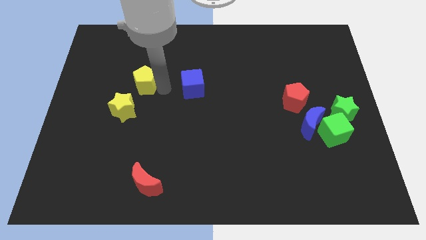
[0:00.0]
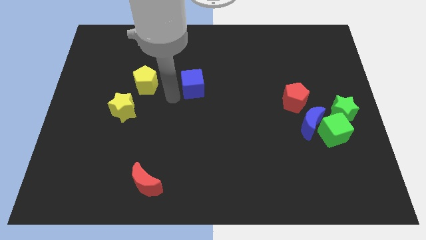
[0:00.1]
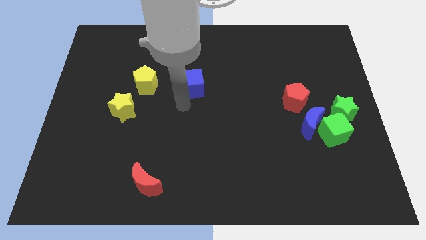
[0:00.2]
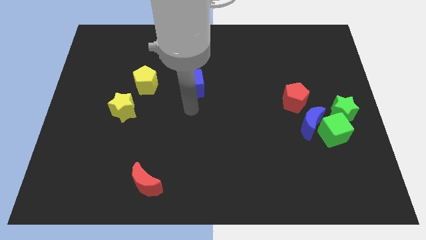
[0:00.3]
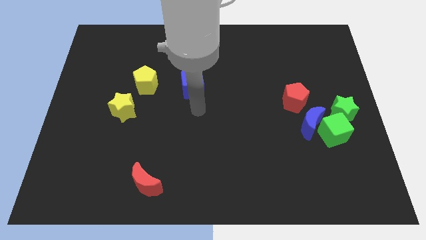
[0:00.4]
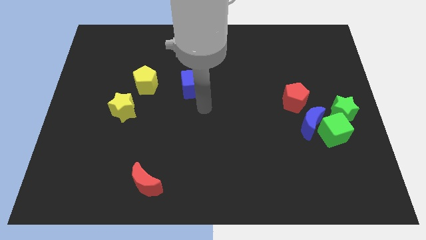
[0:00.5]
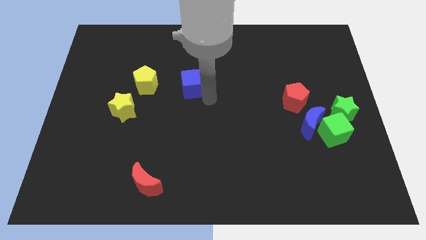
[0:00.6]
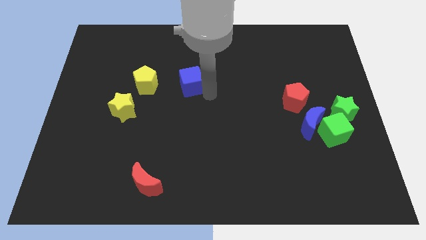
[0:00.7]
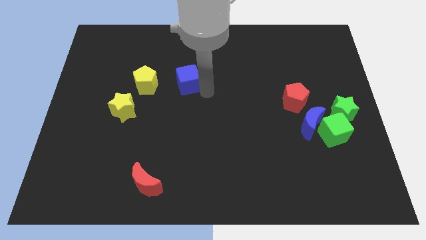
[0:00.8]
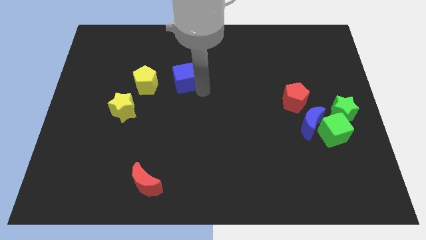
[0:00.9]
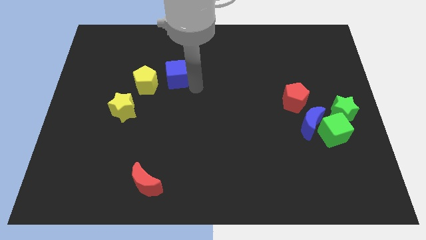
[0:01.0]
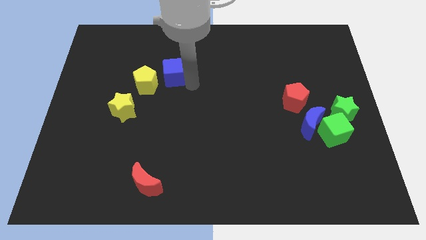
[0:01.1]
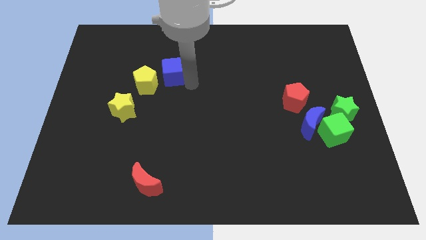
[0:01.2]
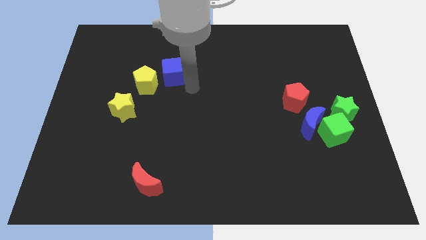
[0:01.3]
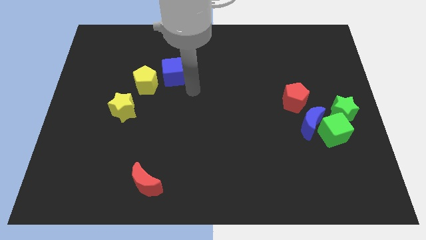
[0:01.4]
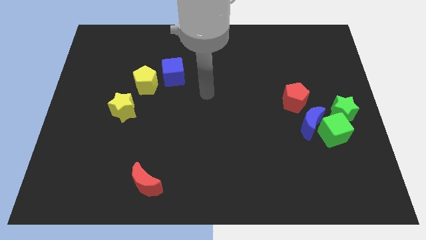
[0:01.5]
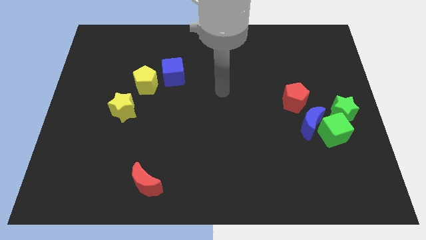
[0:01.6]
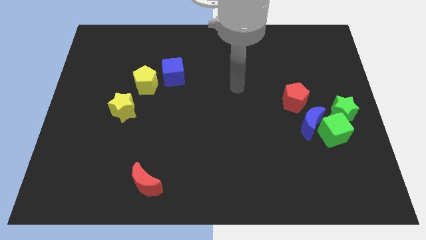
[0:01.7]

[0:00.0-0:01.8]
push the blue cube to the right of yellow pentagon

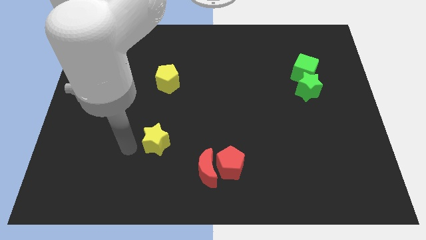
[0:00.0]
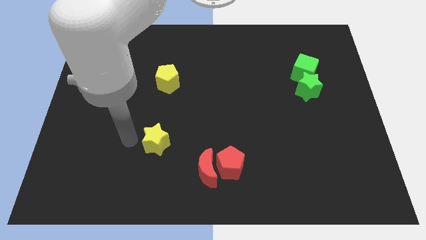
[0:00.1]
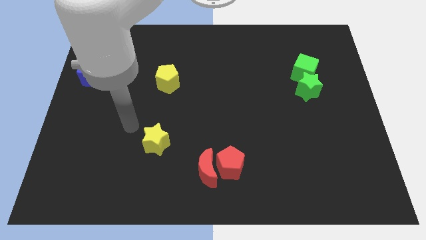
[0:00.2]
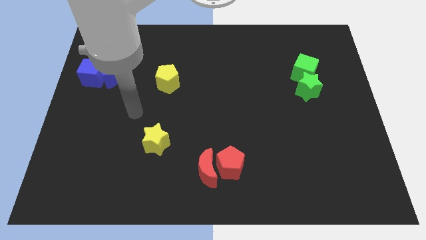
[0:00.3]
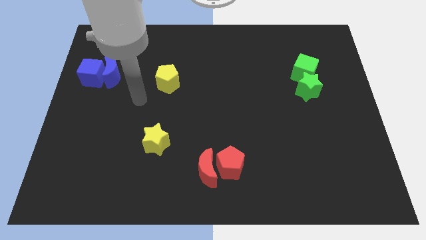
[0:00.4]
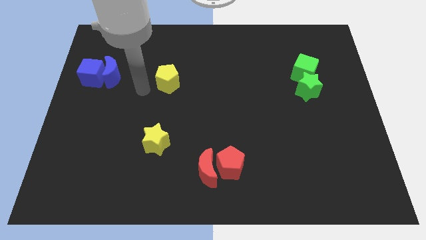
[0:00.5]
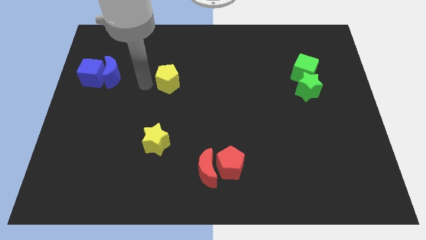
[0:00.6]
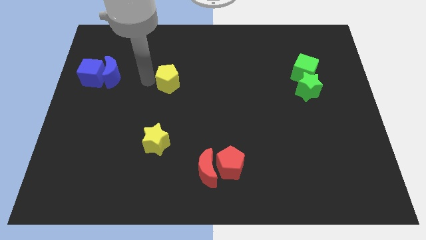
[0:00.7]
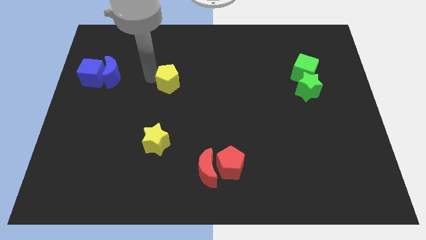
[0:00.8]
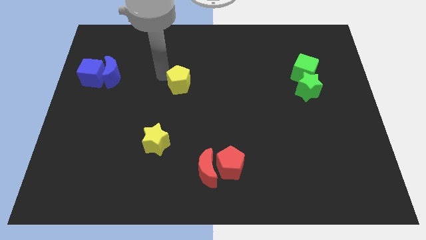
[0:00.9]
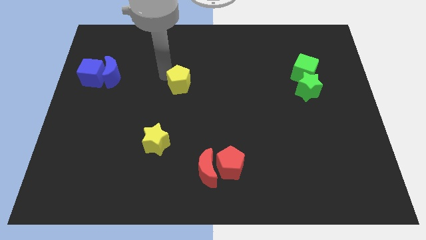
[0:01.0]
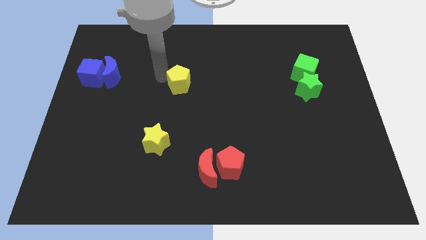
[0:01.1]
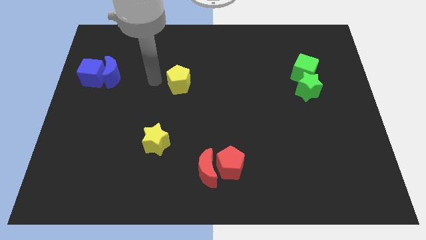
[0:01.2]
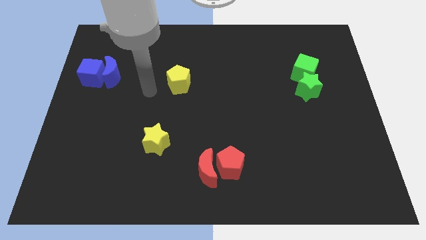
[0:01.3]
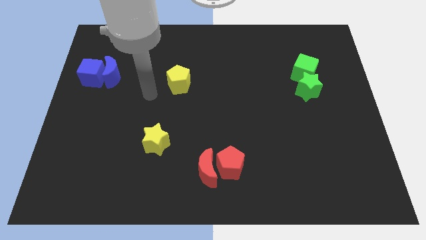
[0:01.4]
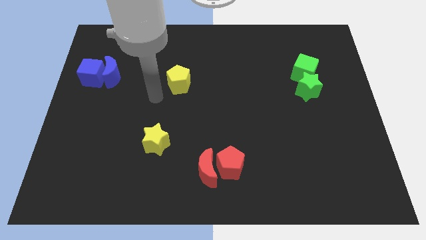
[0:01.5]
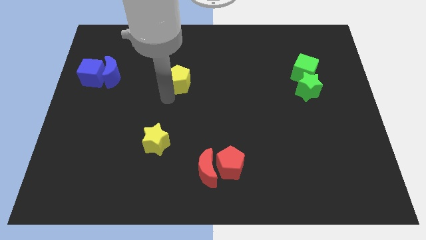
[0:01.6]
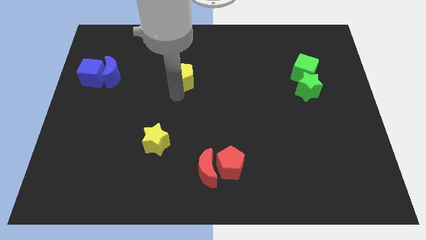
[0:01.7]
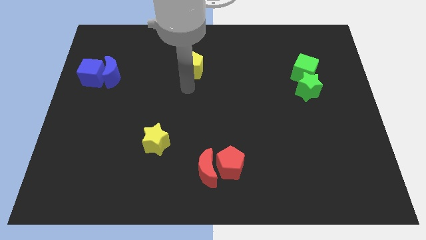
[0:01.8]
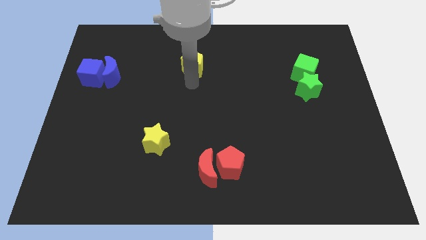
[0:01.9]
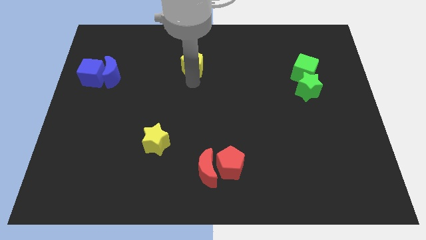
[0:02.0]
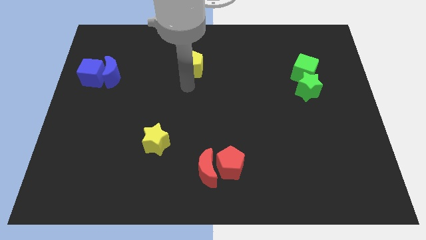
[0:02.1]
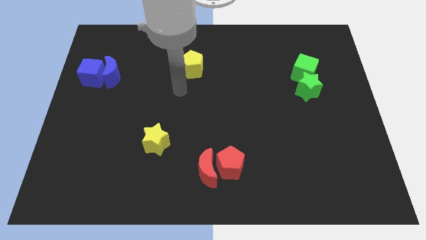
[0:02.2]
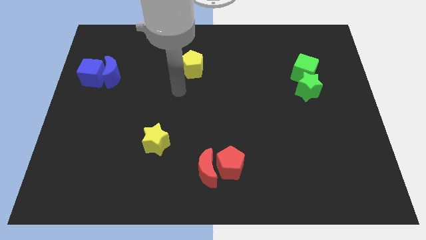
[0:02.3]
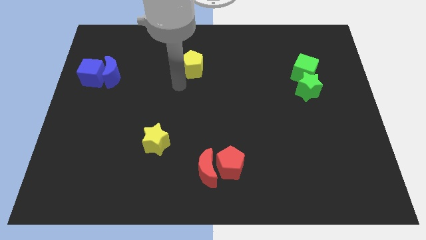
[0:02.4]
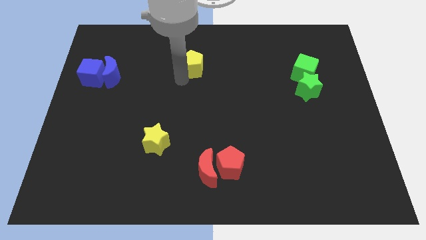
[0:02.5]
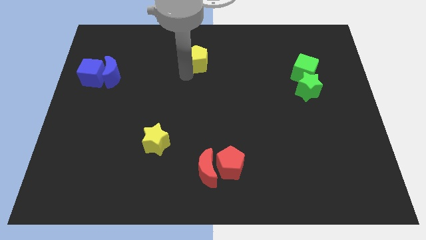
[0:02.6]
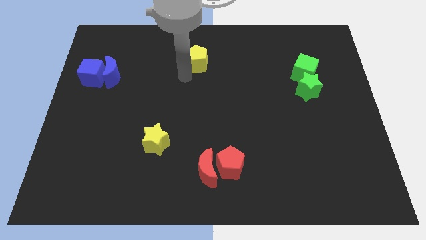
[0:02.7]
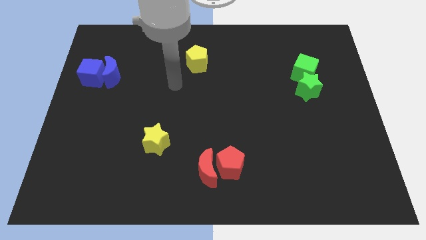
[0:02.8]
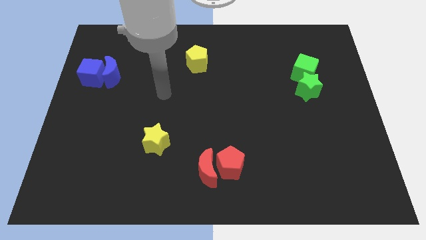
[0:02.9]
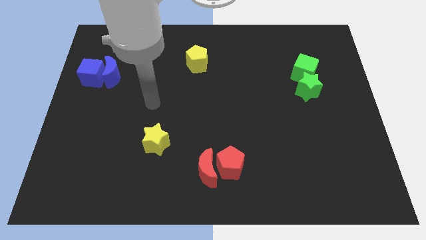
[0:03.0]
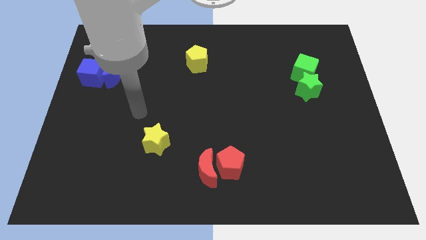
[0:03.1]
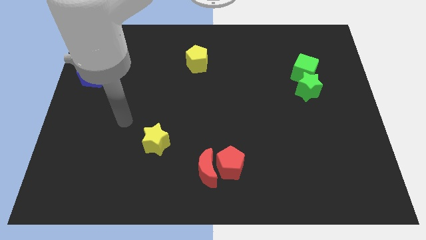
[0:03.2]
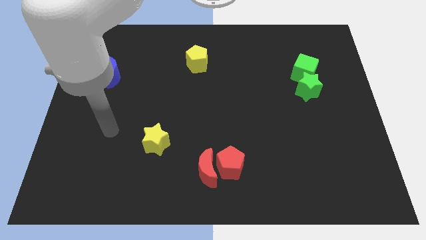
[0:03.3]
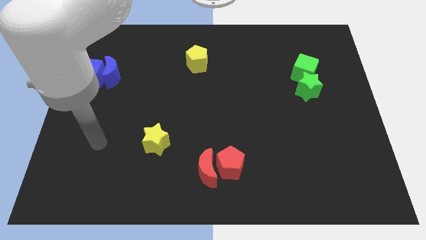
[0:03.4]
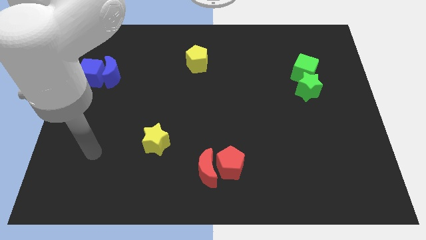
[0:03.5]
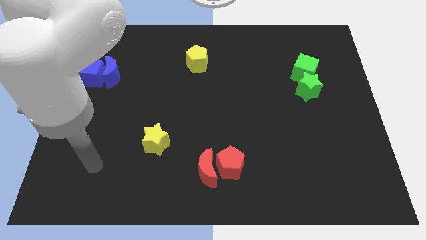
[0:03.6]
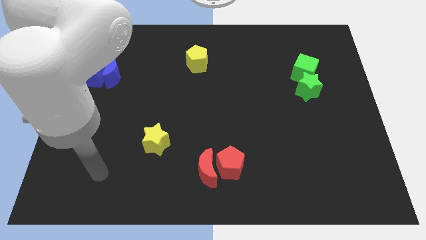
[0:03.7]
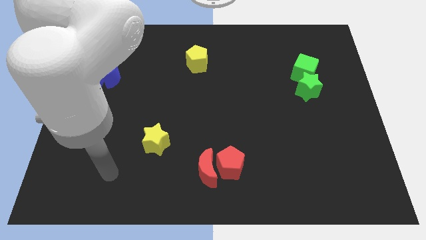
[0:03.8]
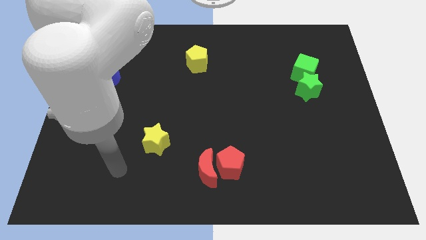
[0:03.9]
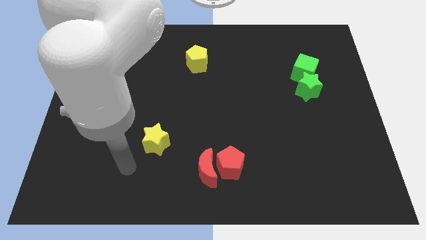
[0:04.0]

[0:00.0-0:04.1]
move the yellow pentagon towards top center

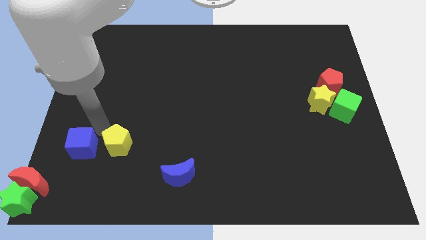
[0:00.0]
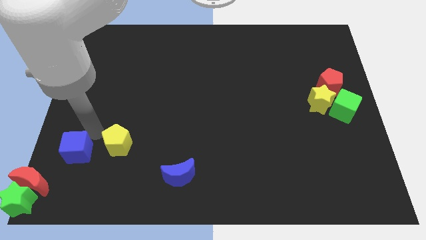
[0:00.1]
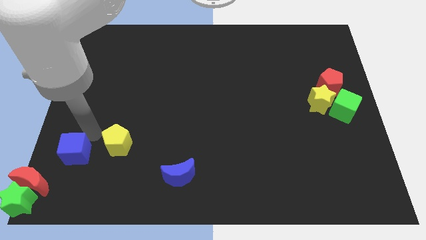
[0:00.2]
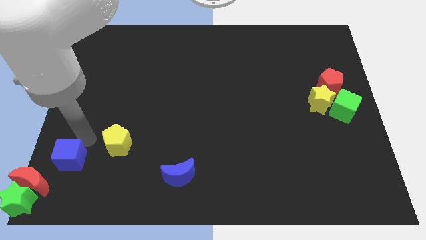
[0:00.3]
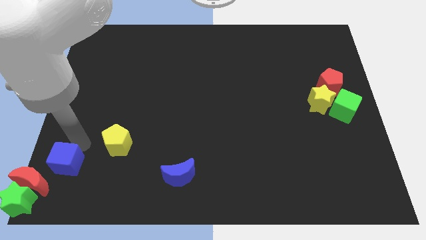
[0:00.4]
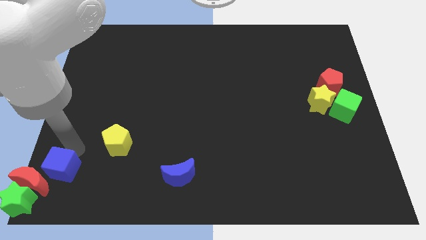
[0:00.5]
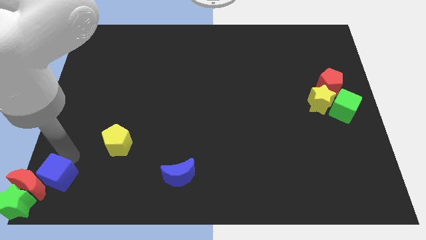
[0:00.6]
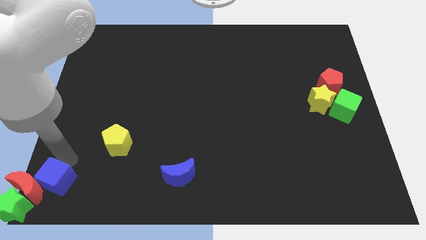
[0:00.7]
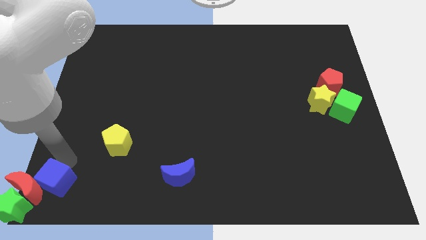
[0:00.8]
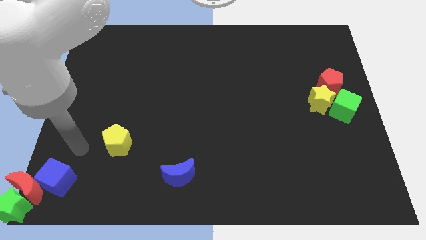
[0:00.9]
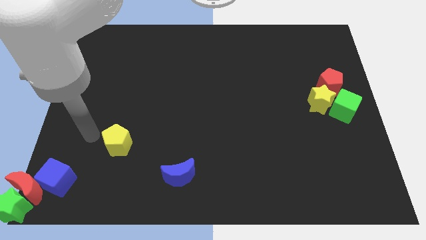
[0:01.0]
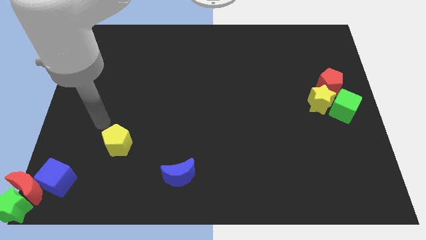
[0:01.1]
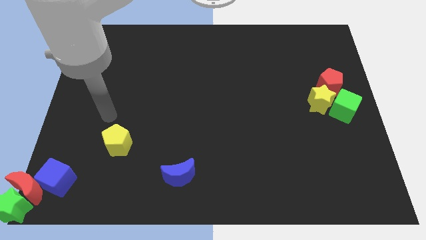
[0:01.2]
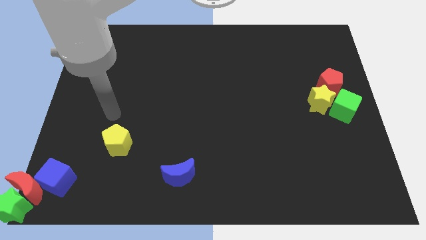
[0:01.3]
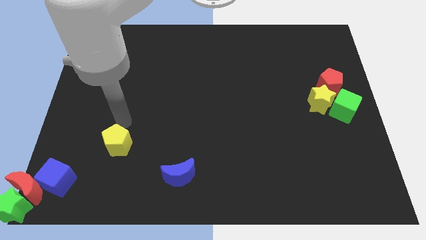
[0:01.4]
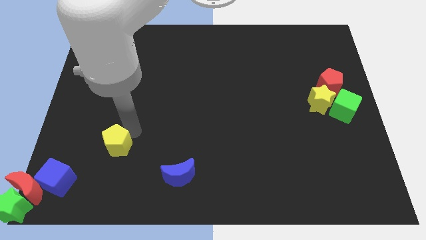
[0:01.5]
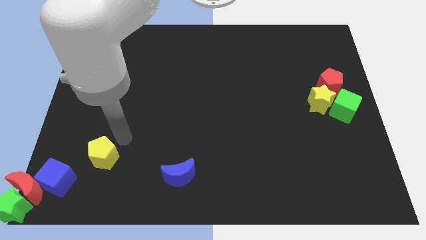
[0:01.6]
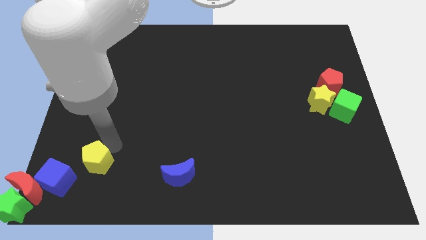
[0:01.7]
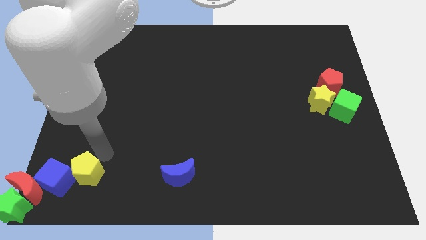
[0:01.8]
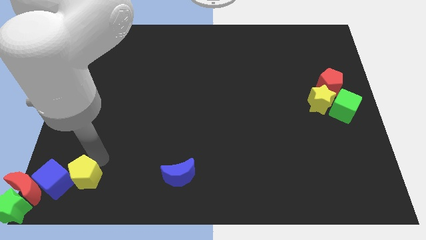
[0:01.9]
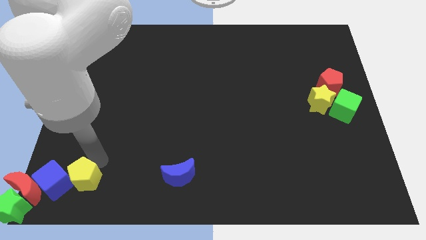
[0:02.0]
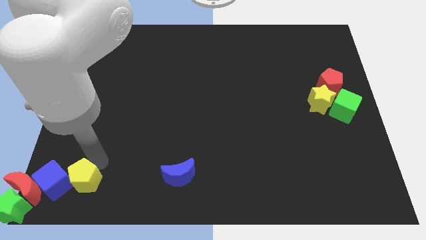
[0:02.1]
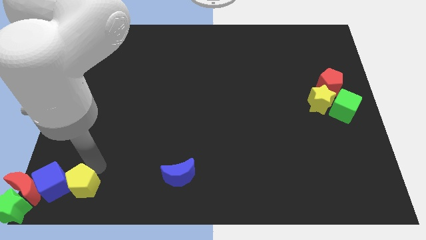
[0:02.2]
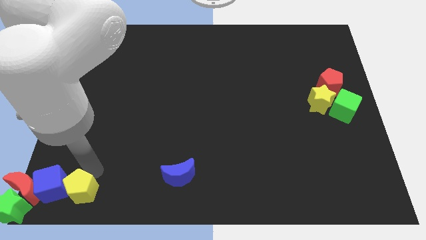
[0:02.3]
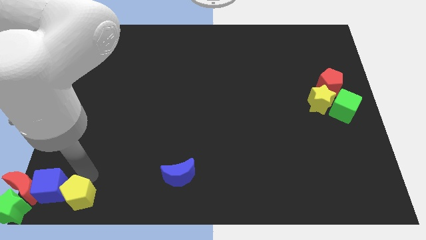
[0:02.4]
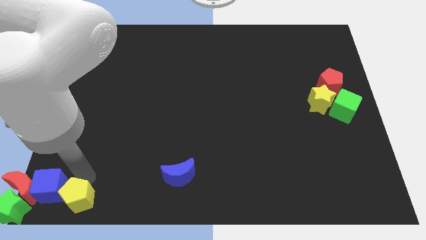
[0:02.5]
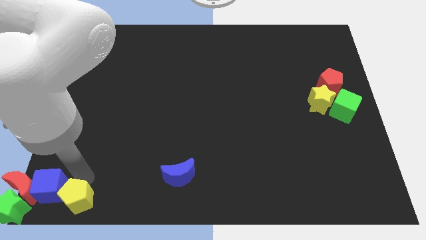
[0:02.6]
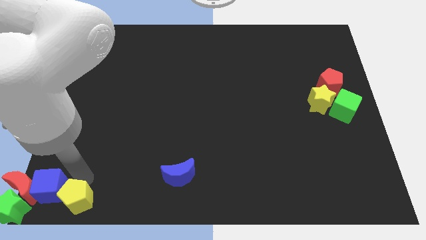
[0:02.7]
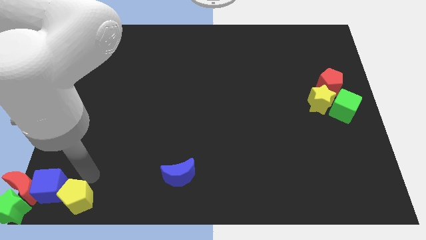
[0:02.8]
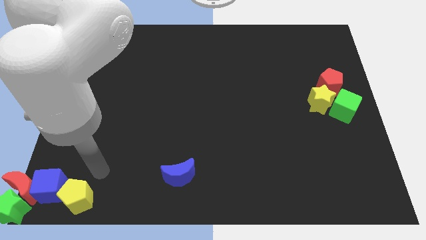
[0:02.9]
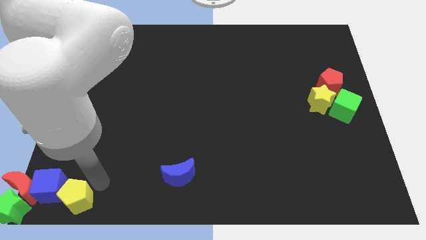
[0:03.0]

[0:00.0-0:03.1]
push the blue cube into the red moon
